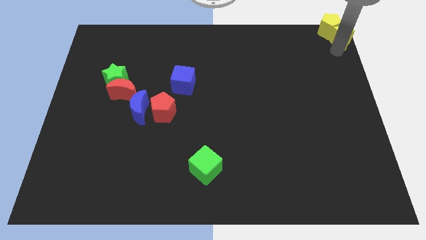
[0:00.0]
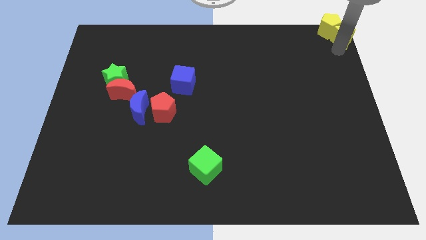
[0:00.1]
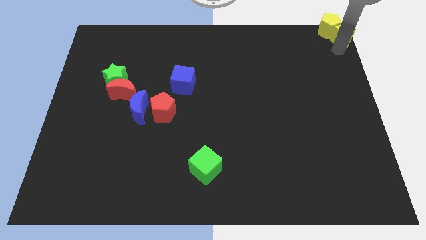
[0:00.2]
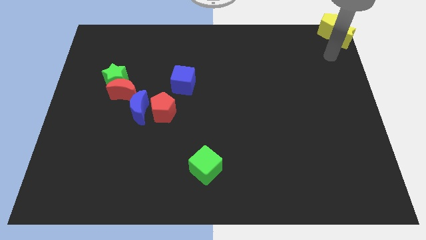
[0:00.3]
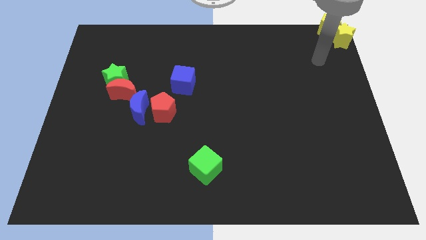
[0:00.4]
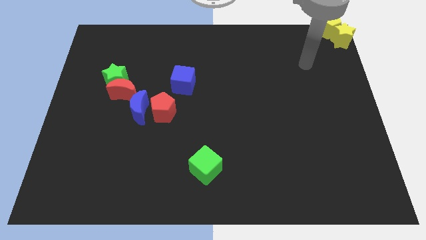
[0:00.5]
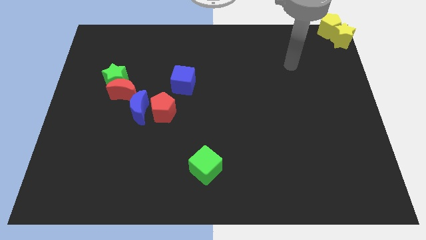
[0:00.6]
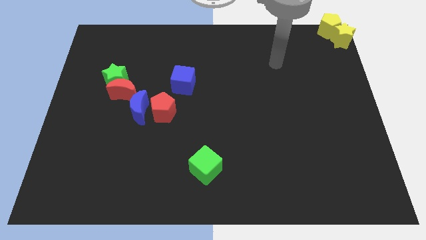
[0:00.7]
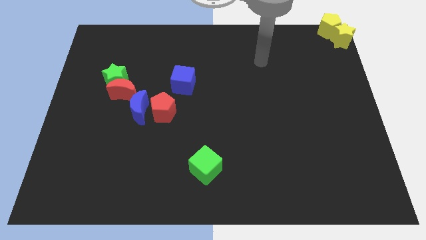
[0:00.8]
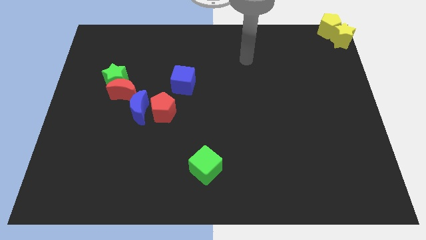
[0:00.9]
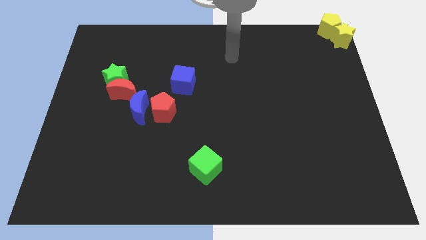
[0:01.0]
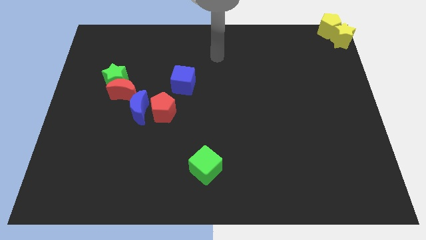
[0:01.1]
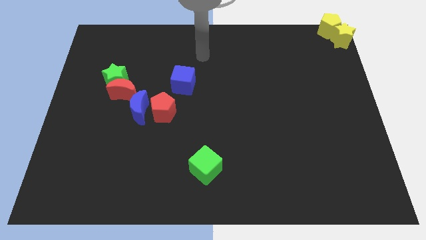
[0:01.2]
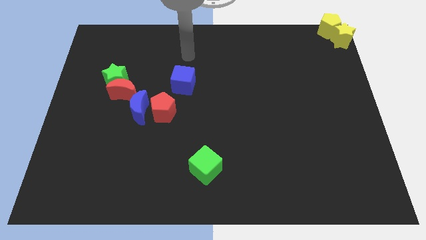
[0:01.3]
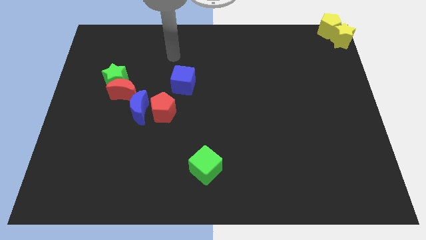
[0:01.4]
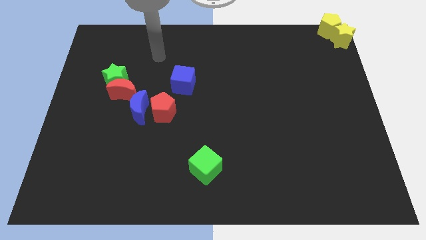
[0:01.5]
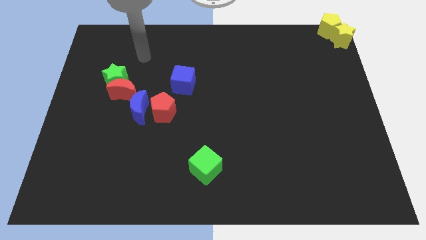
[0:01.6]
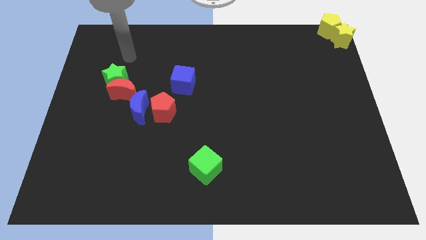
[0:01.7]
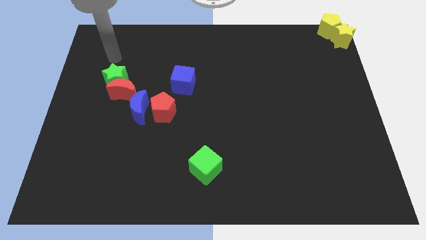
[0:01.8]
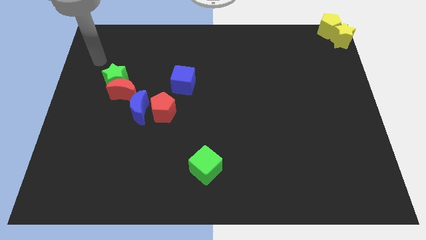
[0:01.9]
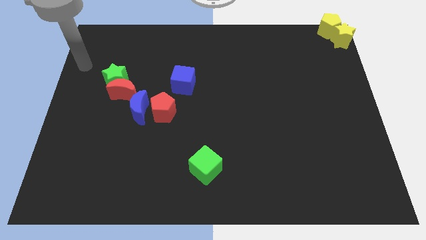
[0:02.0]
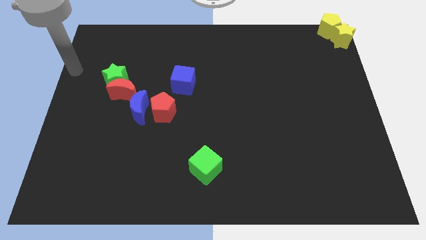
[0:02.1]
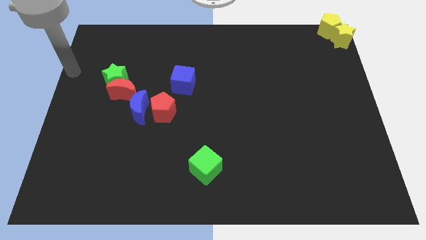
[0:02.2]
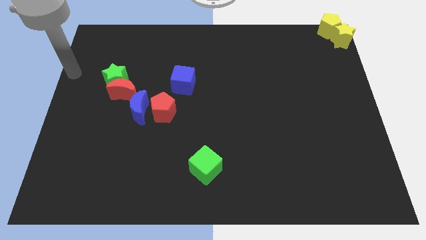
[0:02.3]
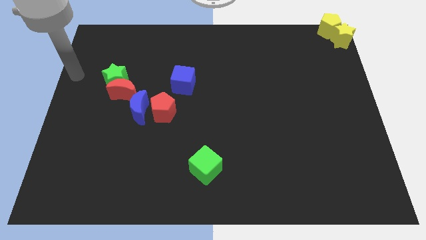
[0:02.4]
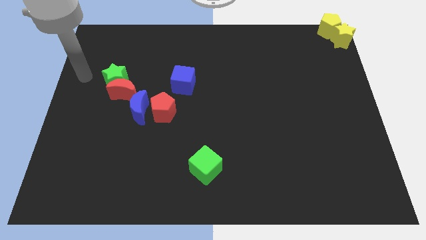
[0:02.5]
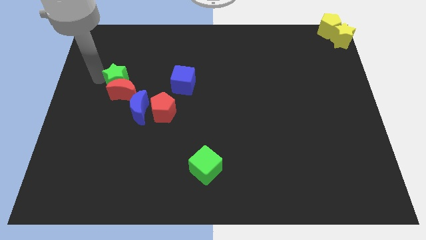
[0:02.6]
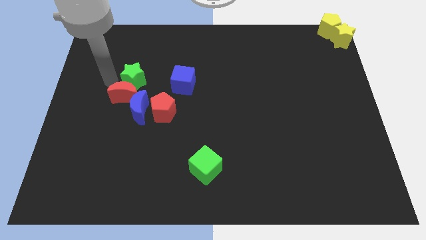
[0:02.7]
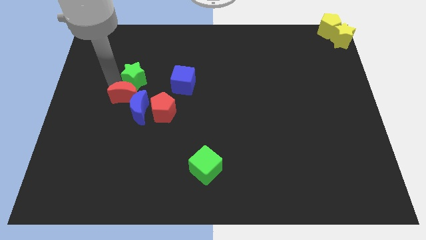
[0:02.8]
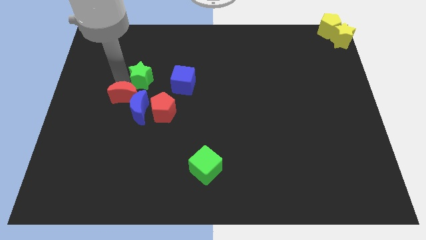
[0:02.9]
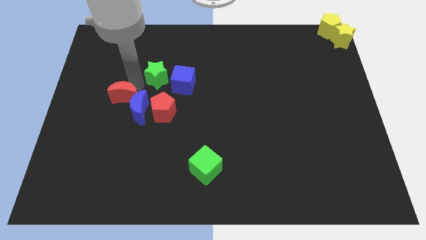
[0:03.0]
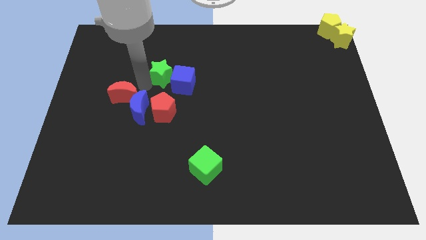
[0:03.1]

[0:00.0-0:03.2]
separate the green star from the red moon

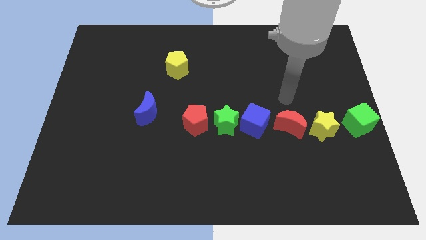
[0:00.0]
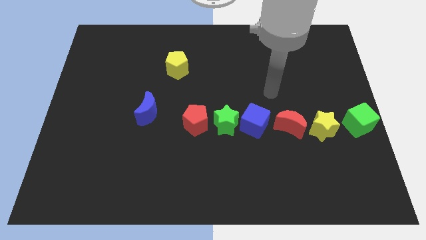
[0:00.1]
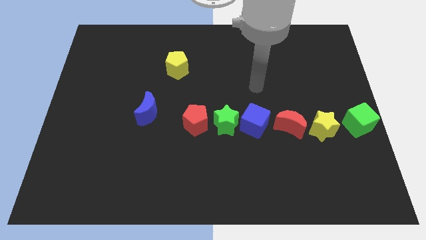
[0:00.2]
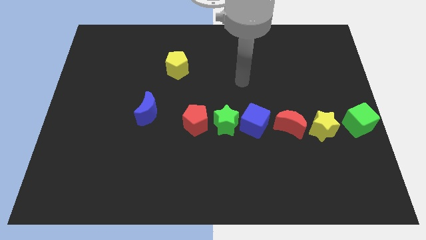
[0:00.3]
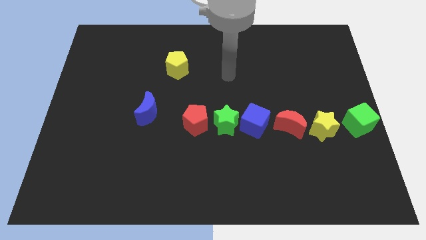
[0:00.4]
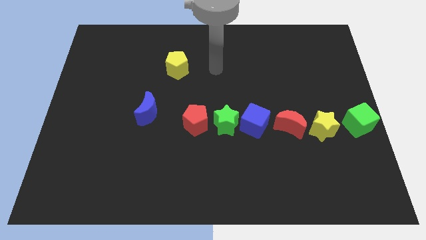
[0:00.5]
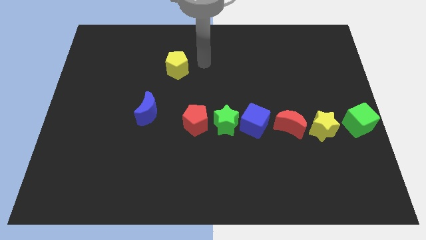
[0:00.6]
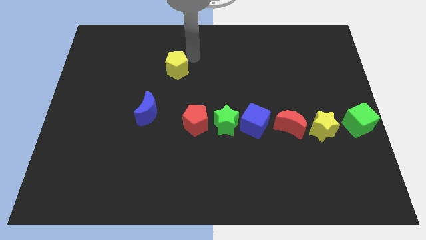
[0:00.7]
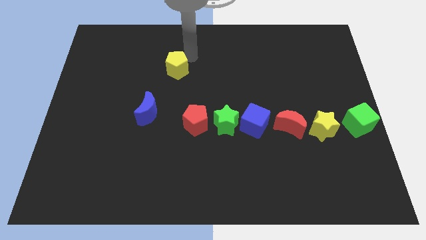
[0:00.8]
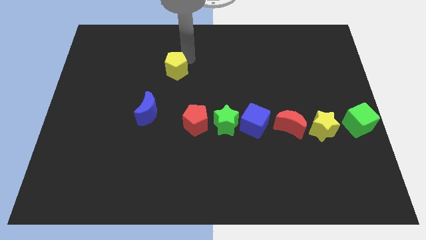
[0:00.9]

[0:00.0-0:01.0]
tap the top right side of the yellow pentagon

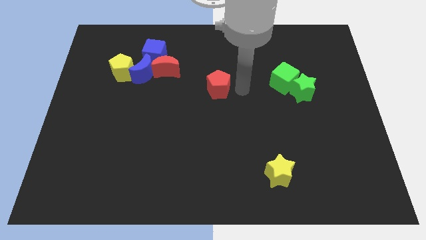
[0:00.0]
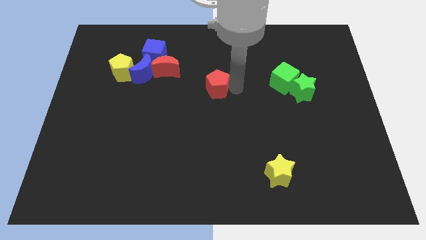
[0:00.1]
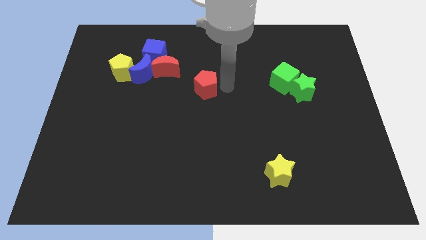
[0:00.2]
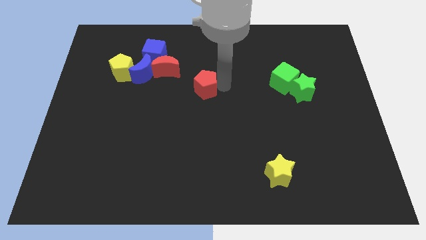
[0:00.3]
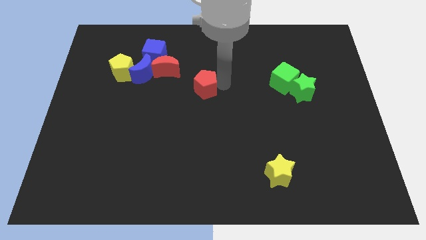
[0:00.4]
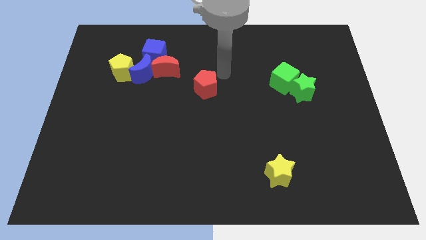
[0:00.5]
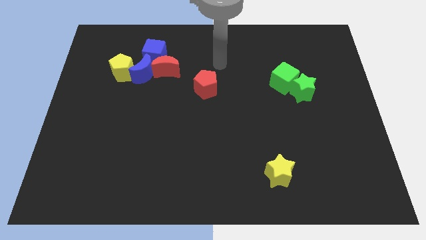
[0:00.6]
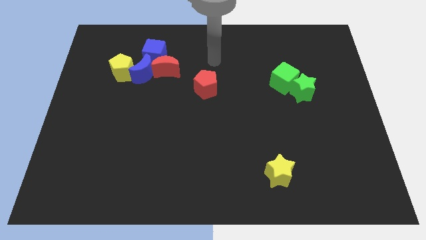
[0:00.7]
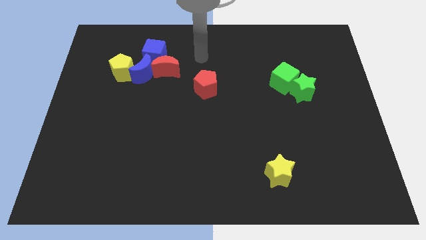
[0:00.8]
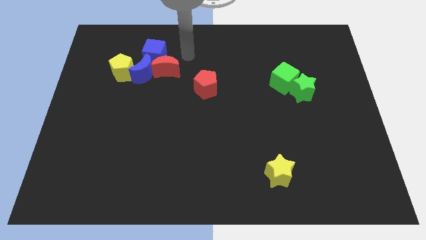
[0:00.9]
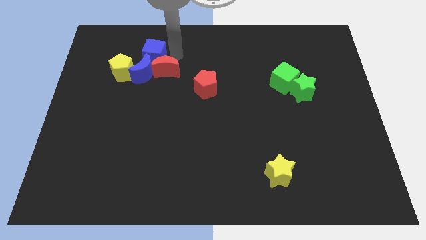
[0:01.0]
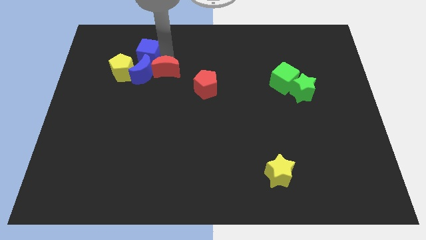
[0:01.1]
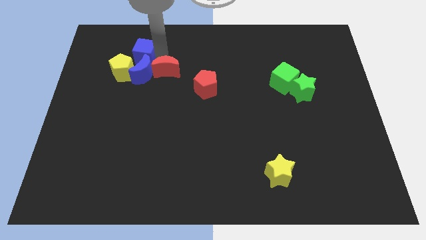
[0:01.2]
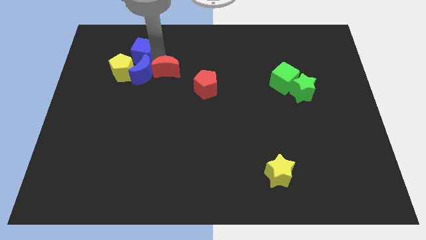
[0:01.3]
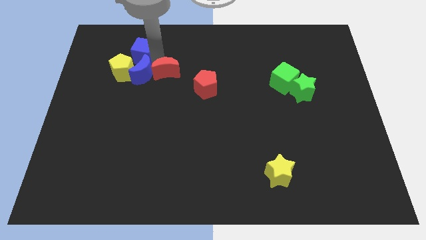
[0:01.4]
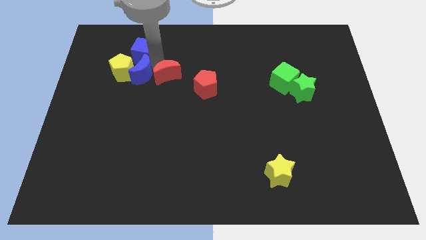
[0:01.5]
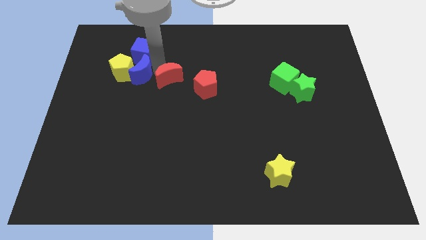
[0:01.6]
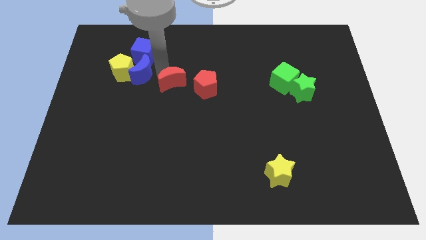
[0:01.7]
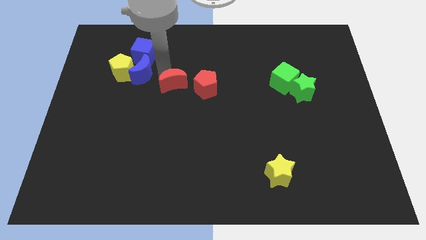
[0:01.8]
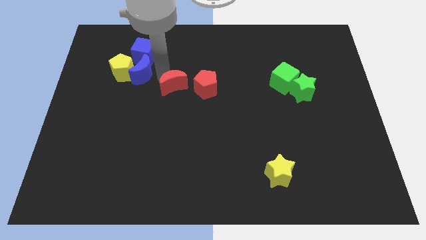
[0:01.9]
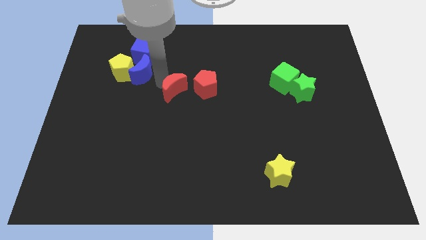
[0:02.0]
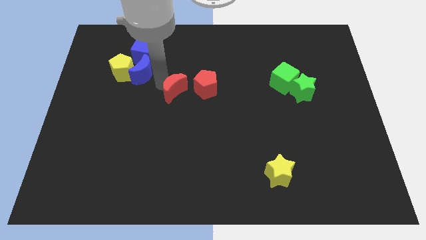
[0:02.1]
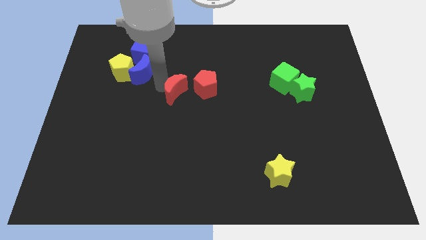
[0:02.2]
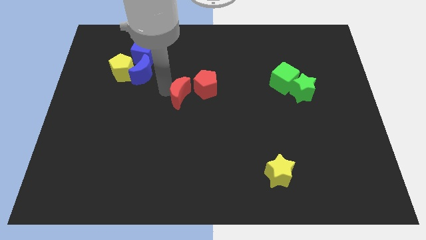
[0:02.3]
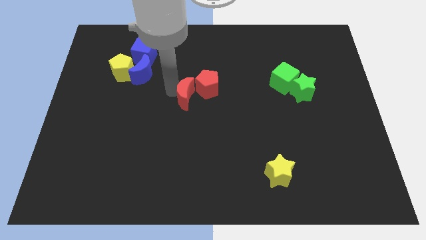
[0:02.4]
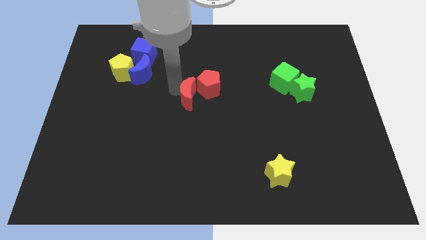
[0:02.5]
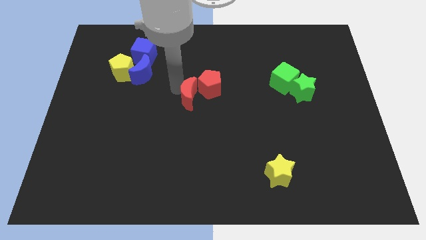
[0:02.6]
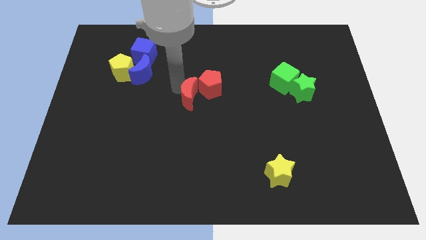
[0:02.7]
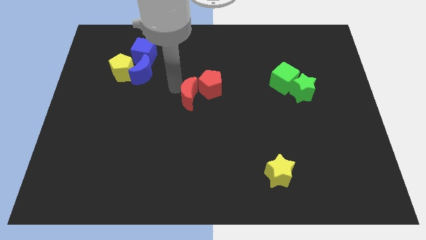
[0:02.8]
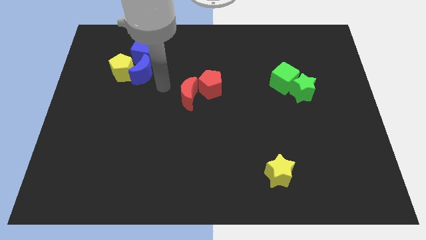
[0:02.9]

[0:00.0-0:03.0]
move red moon to the left of red pentagon

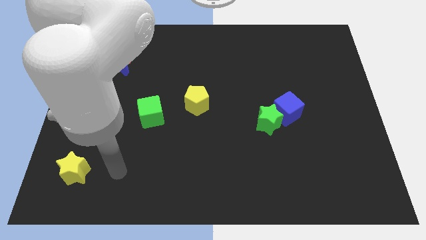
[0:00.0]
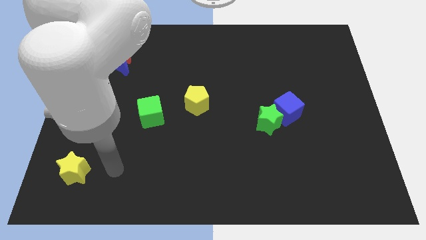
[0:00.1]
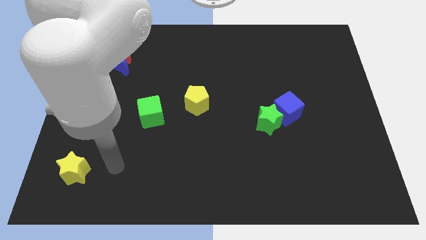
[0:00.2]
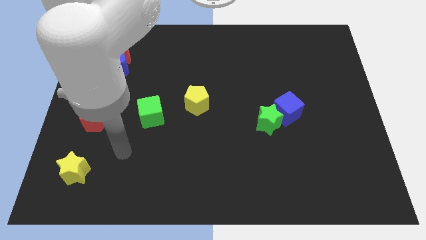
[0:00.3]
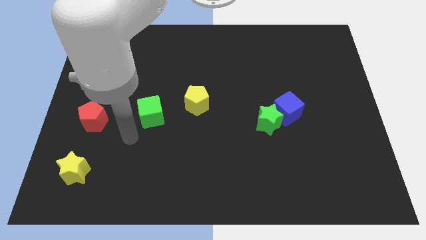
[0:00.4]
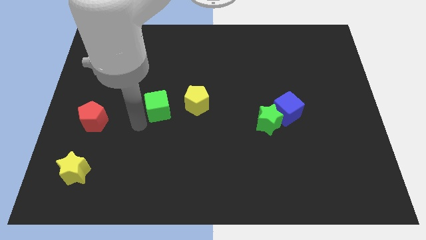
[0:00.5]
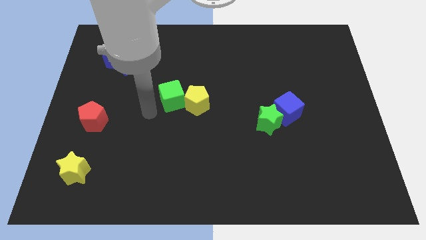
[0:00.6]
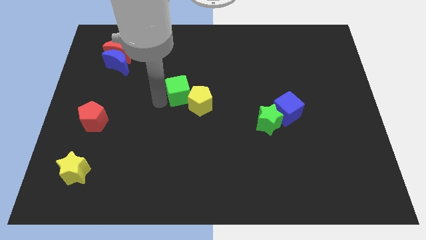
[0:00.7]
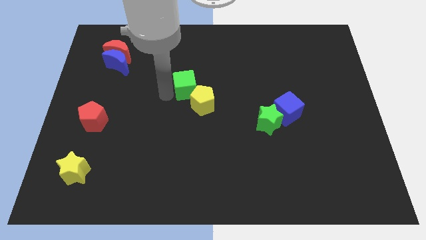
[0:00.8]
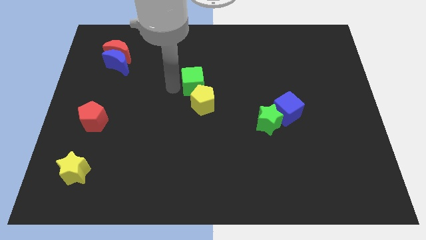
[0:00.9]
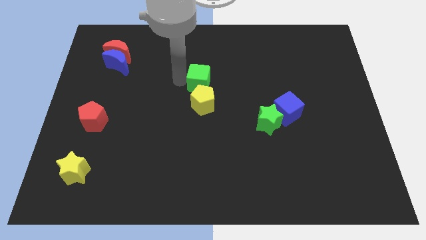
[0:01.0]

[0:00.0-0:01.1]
slide the green cube on top of the yellow pentagon

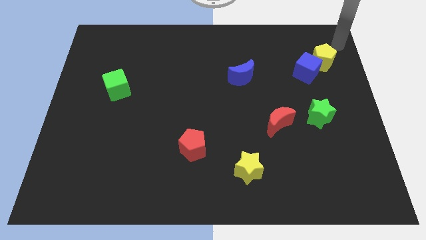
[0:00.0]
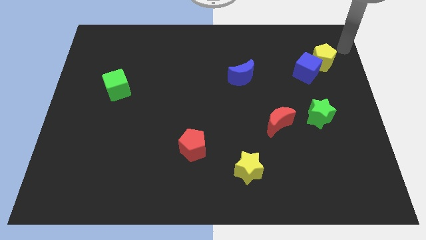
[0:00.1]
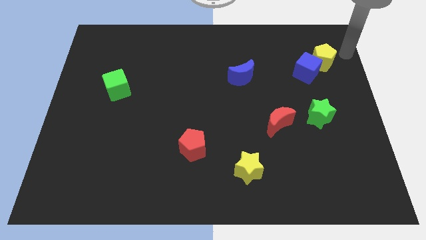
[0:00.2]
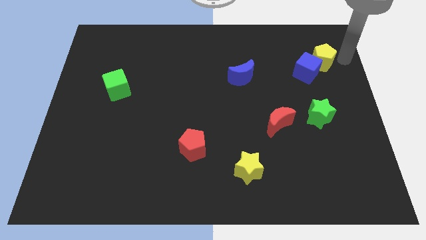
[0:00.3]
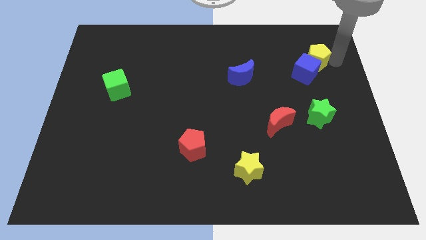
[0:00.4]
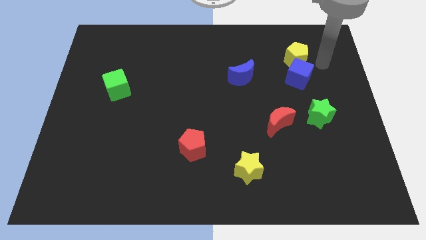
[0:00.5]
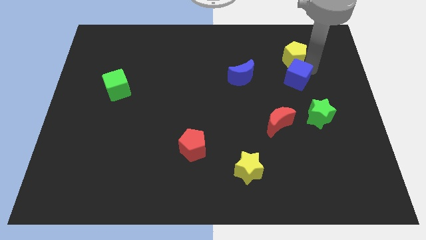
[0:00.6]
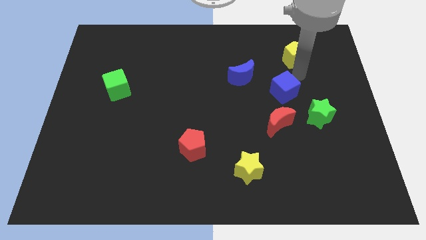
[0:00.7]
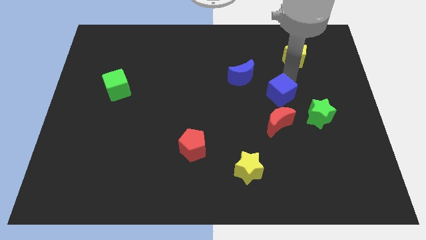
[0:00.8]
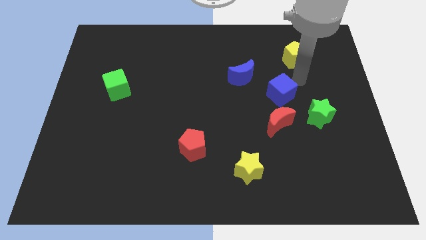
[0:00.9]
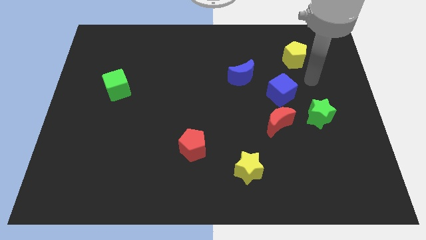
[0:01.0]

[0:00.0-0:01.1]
separate the blue cube from the yellow pentagon
